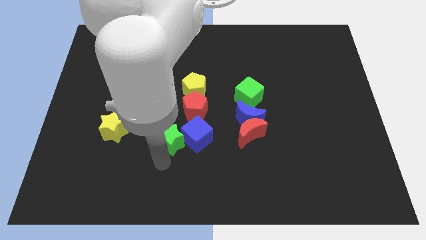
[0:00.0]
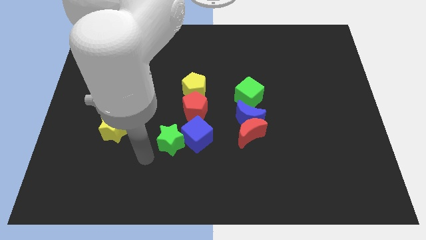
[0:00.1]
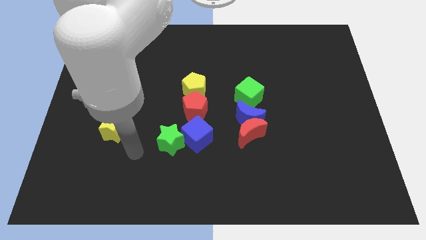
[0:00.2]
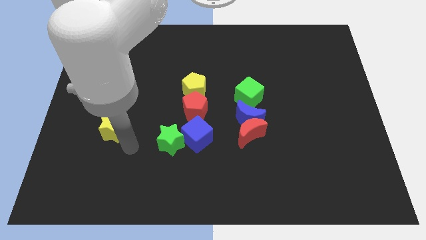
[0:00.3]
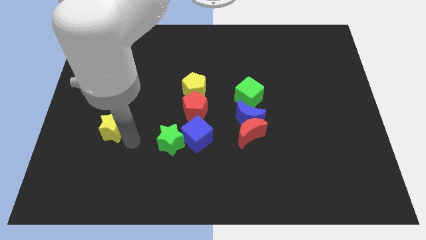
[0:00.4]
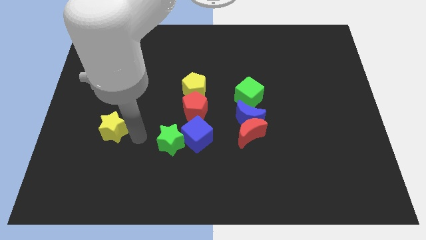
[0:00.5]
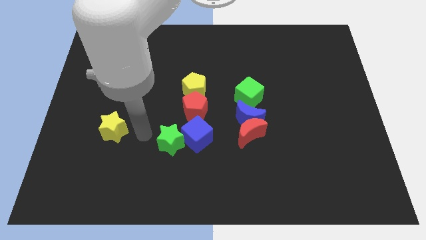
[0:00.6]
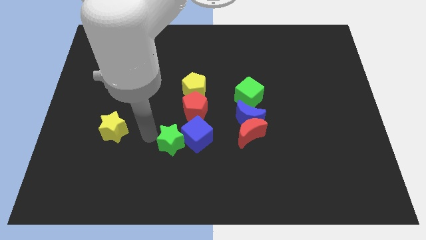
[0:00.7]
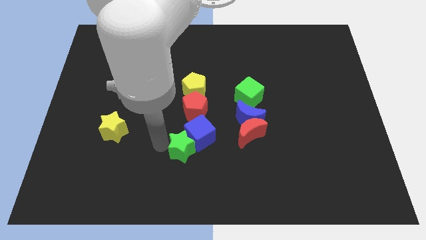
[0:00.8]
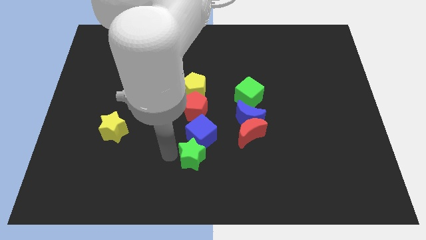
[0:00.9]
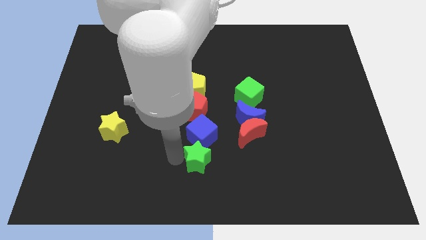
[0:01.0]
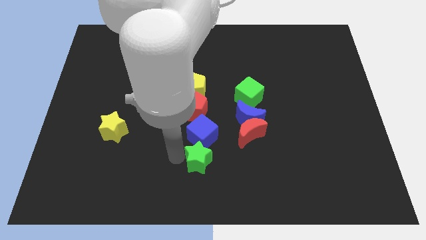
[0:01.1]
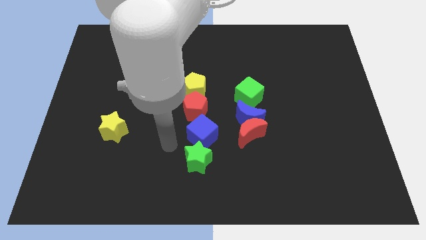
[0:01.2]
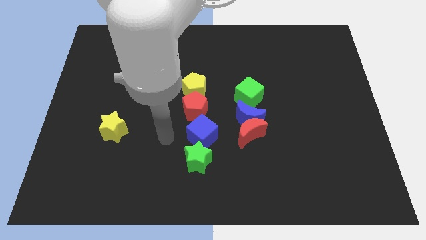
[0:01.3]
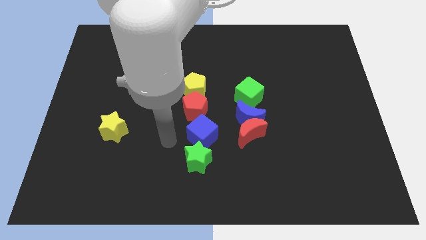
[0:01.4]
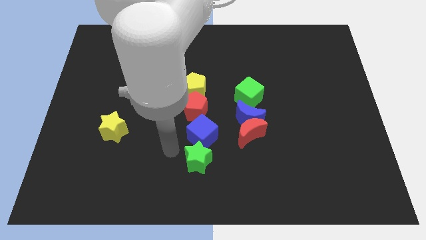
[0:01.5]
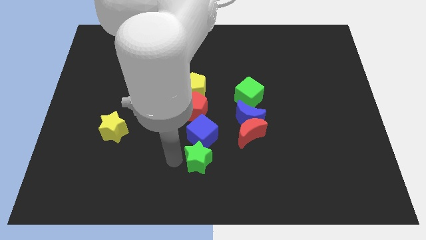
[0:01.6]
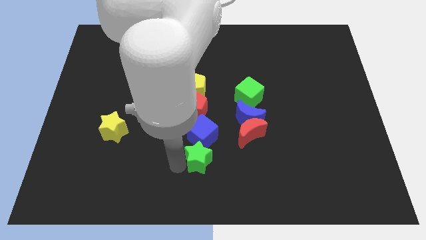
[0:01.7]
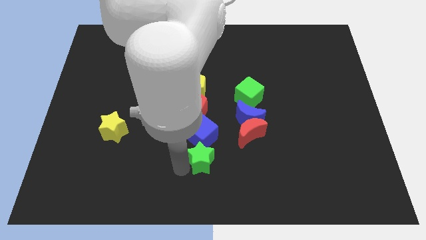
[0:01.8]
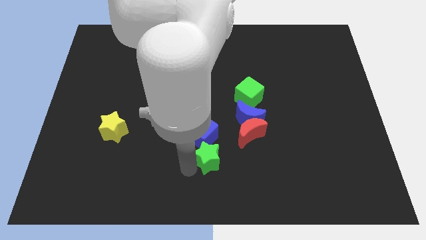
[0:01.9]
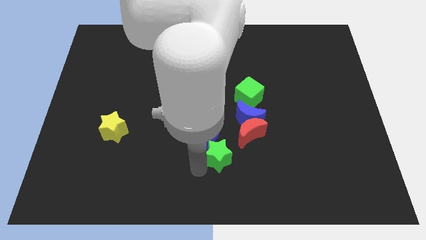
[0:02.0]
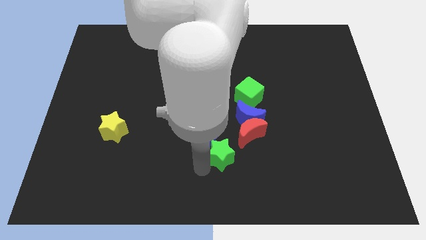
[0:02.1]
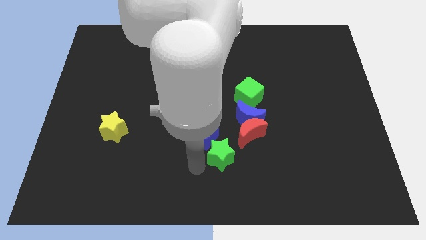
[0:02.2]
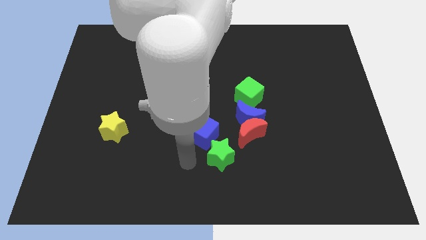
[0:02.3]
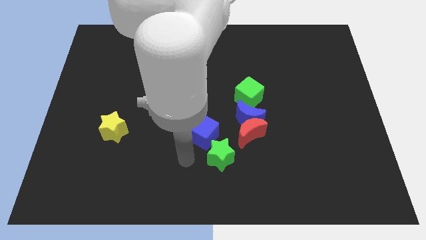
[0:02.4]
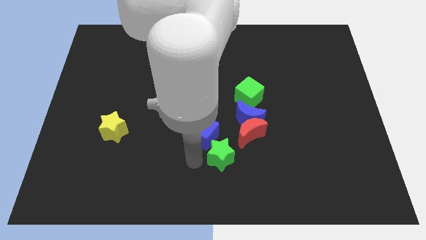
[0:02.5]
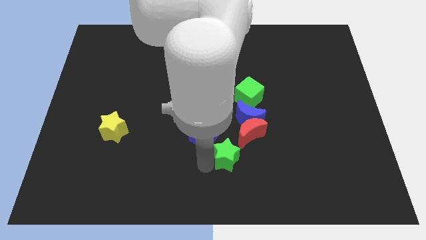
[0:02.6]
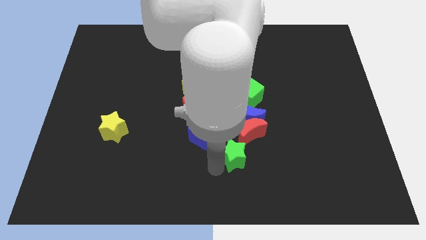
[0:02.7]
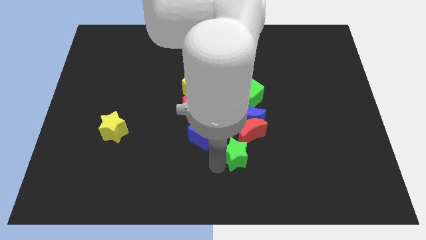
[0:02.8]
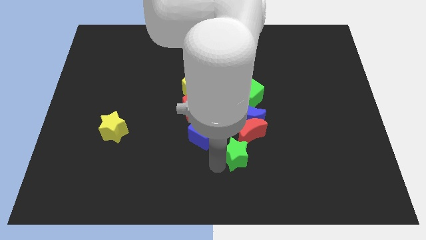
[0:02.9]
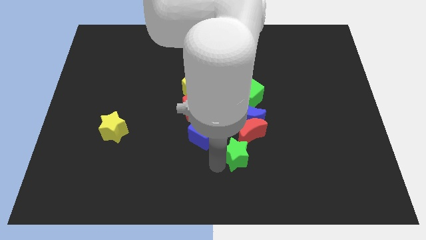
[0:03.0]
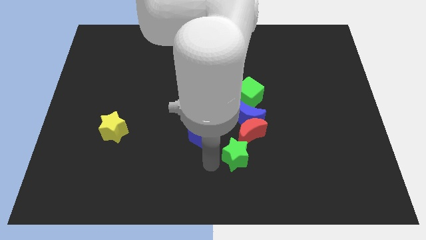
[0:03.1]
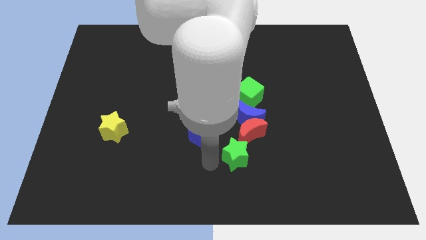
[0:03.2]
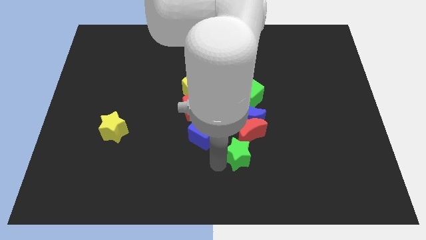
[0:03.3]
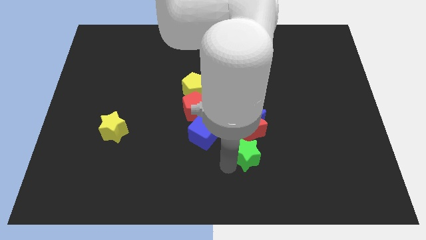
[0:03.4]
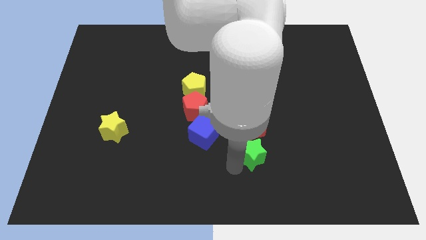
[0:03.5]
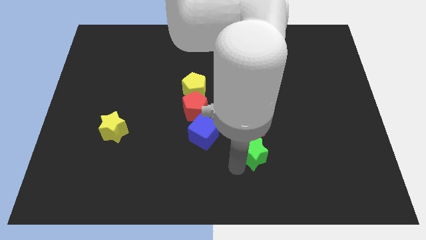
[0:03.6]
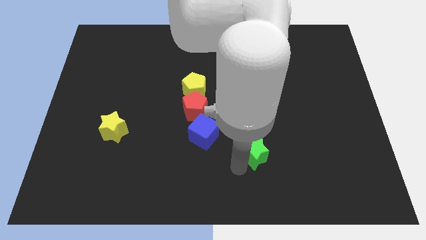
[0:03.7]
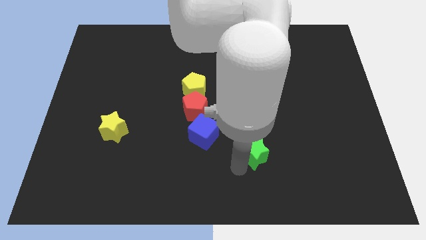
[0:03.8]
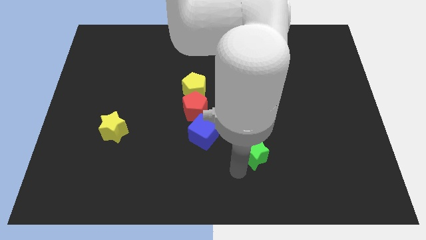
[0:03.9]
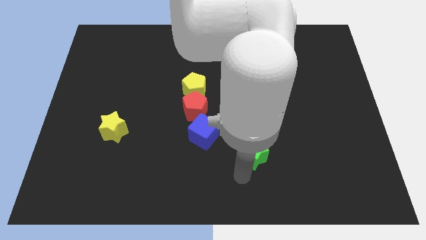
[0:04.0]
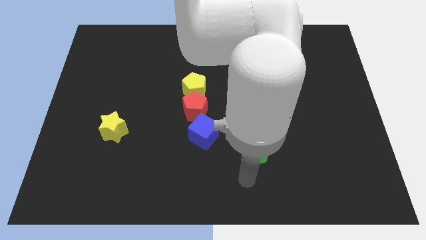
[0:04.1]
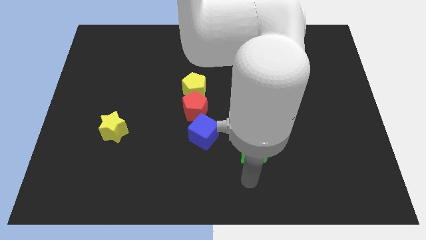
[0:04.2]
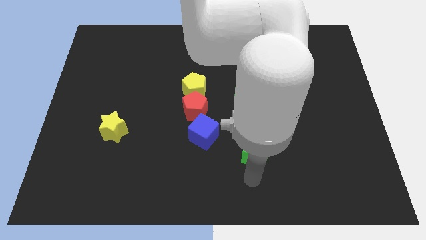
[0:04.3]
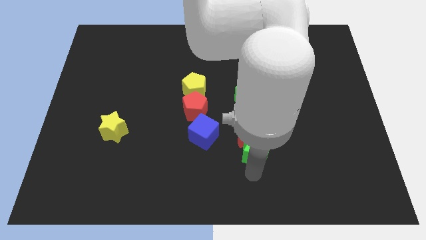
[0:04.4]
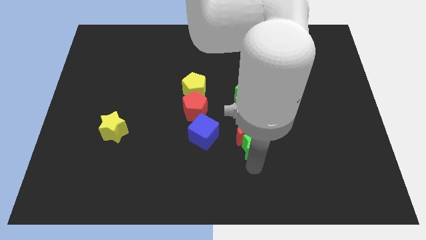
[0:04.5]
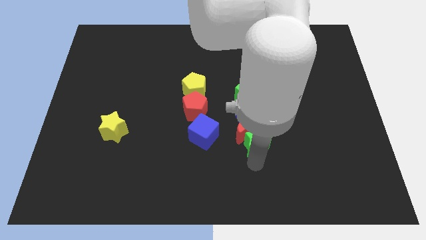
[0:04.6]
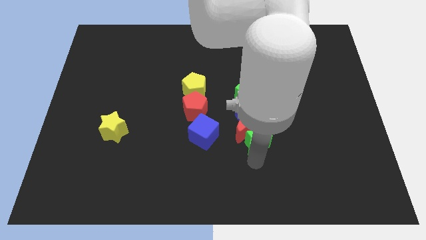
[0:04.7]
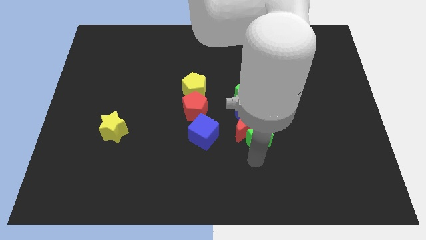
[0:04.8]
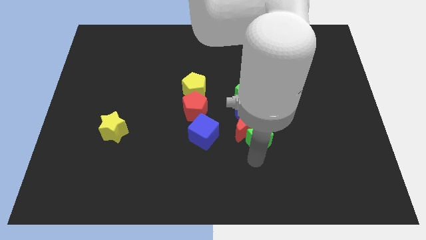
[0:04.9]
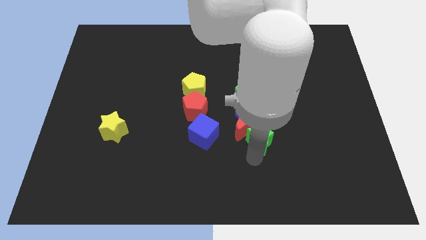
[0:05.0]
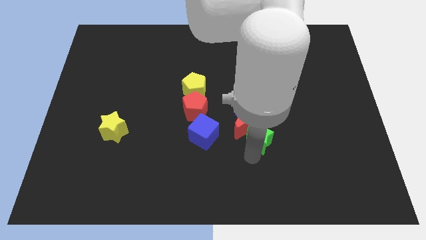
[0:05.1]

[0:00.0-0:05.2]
place the green star below the red moon

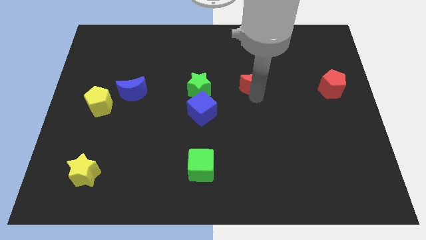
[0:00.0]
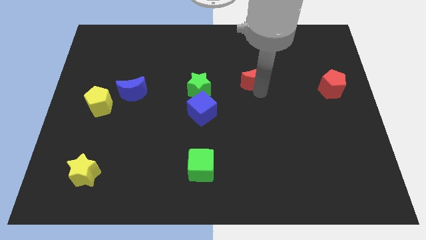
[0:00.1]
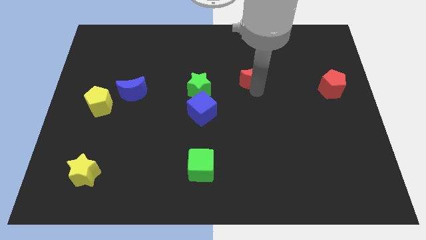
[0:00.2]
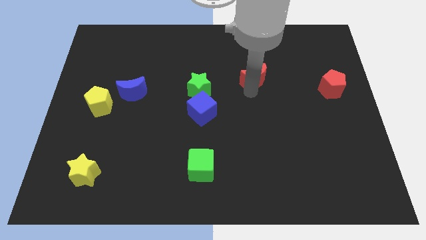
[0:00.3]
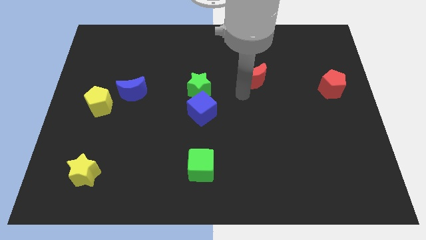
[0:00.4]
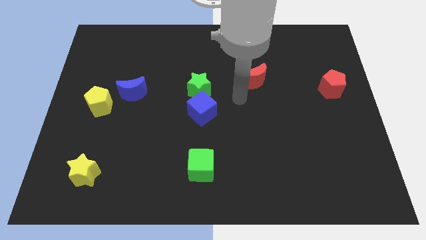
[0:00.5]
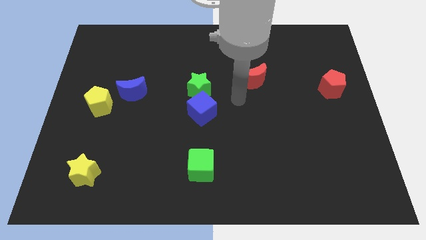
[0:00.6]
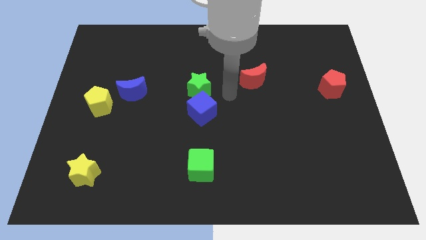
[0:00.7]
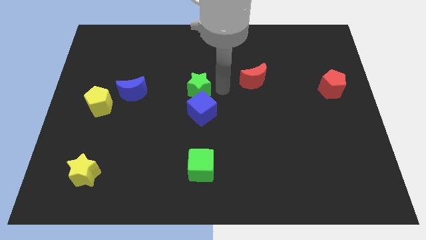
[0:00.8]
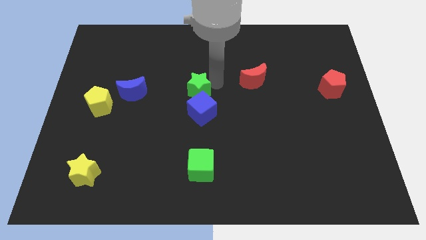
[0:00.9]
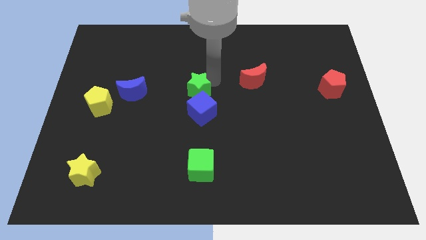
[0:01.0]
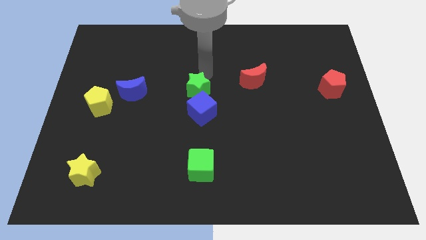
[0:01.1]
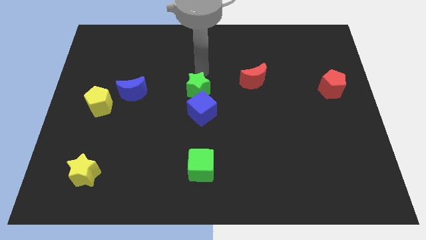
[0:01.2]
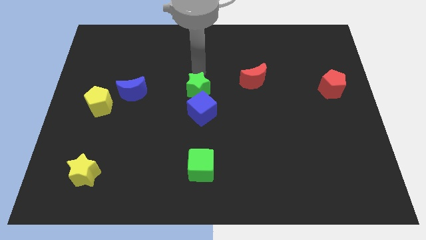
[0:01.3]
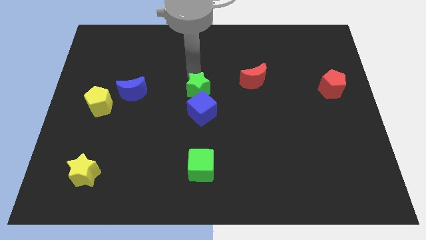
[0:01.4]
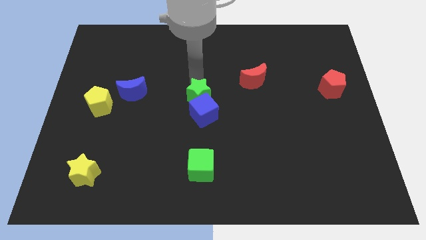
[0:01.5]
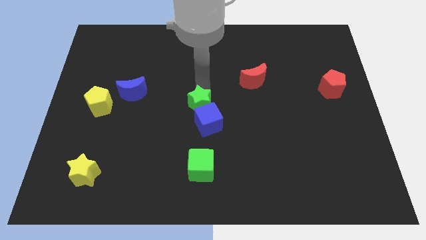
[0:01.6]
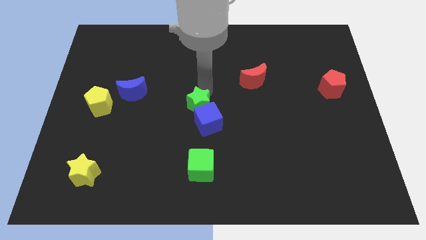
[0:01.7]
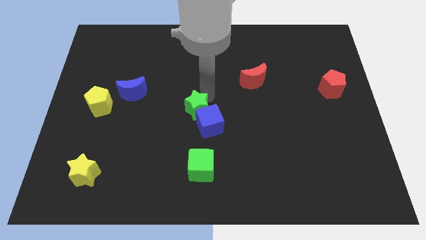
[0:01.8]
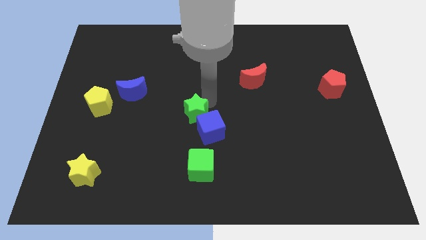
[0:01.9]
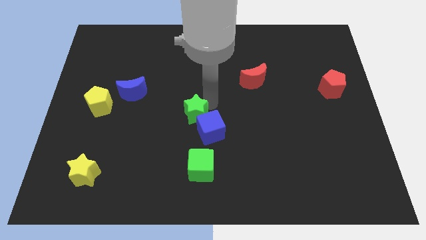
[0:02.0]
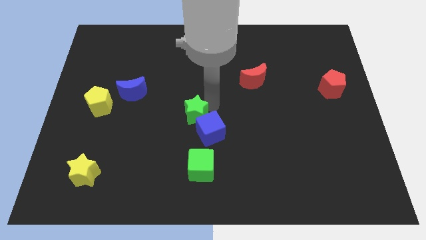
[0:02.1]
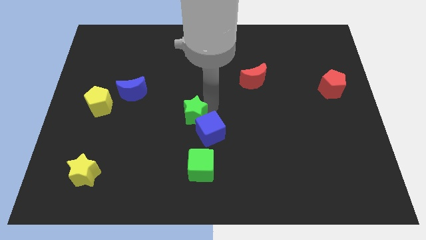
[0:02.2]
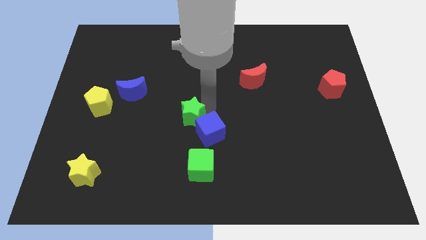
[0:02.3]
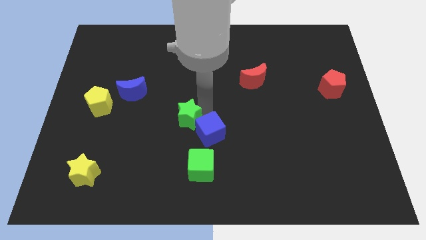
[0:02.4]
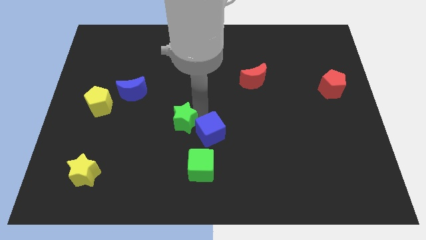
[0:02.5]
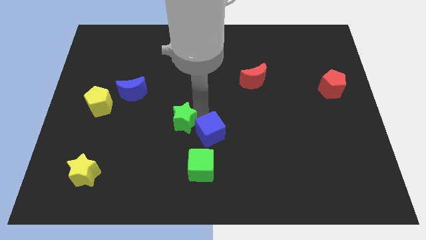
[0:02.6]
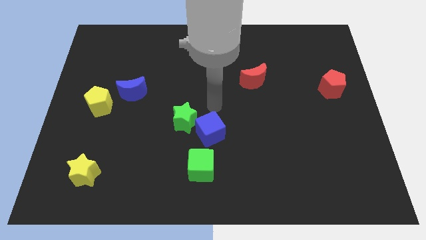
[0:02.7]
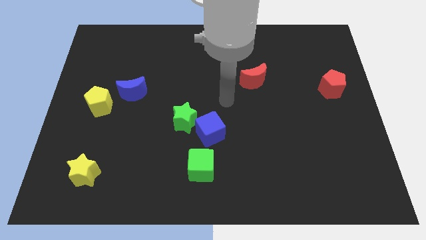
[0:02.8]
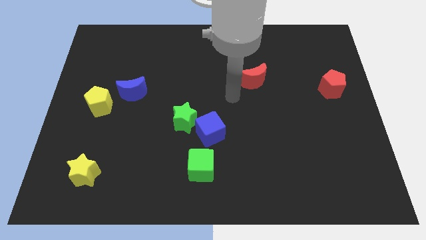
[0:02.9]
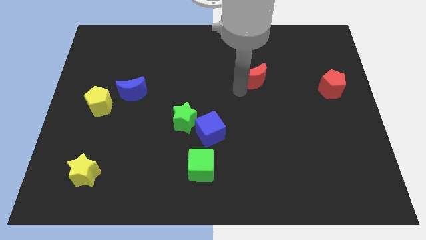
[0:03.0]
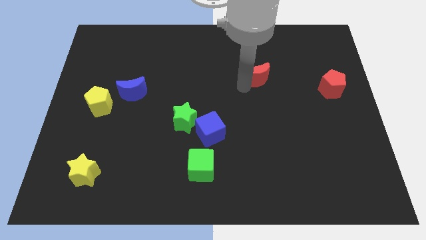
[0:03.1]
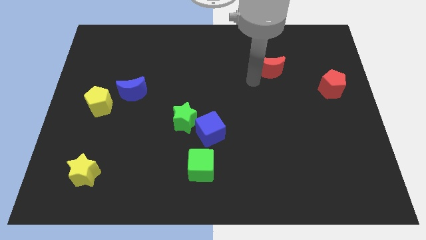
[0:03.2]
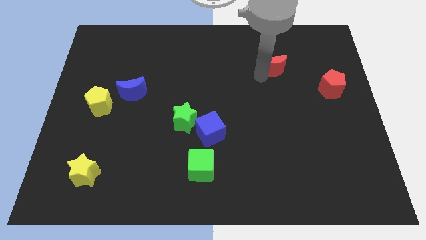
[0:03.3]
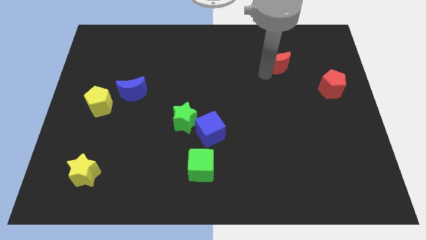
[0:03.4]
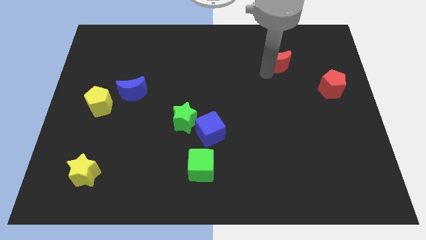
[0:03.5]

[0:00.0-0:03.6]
separate green star and red moon
